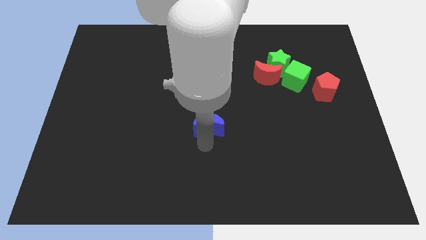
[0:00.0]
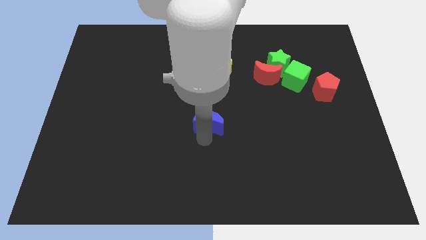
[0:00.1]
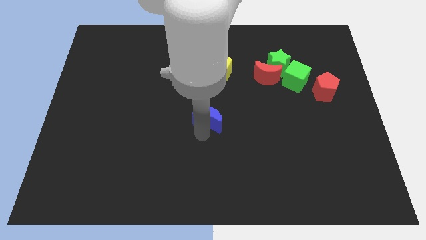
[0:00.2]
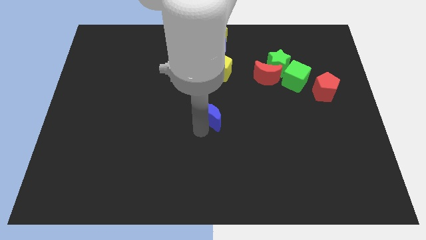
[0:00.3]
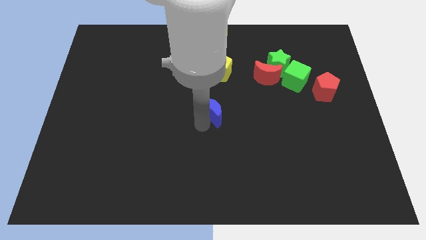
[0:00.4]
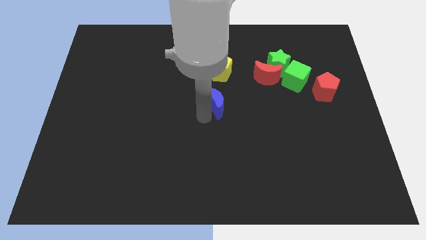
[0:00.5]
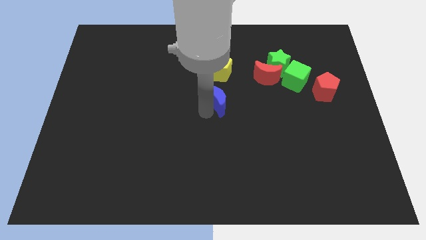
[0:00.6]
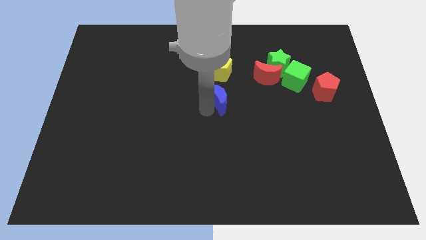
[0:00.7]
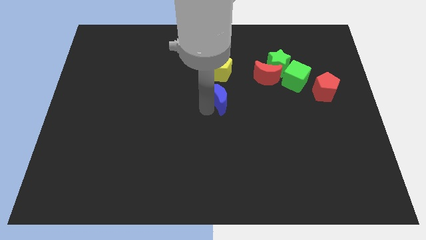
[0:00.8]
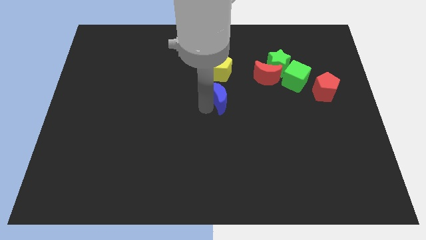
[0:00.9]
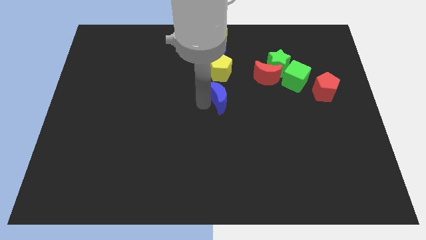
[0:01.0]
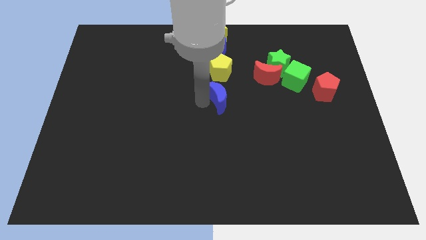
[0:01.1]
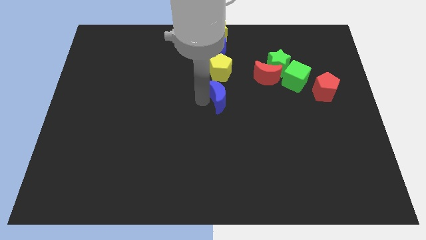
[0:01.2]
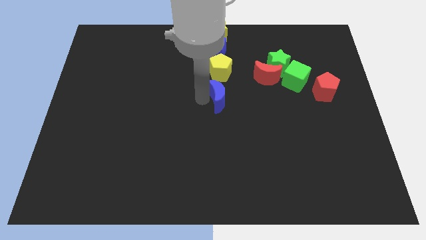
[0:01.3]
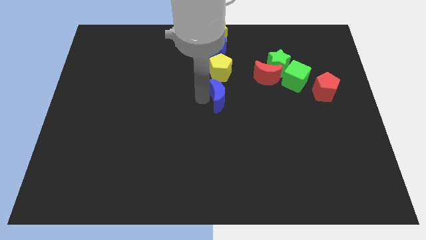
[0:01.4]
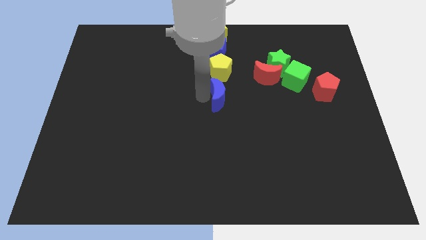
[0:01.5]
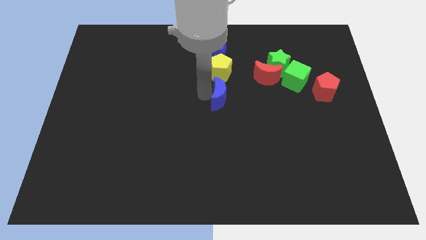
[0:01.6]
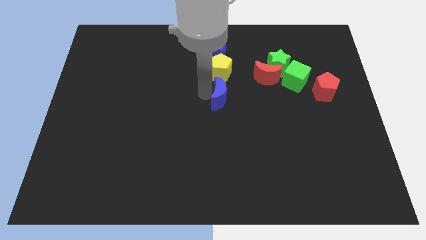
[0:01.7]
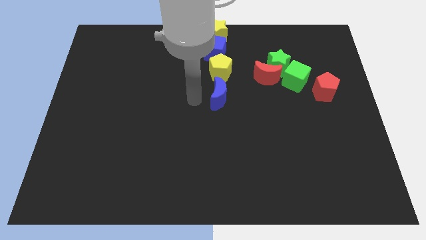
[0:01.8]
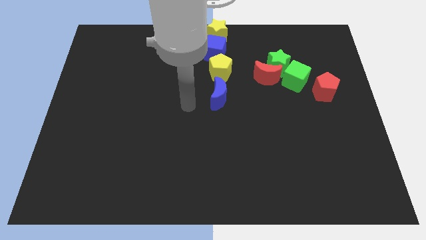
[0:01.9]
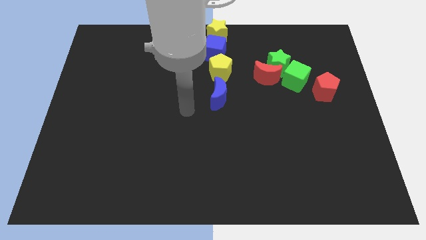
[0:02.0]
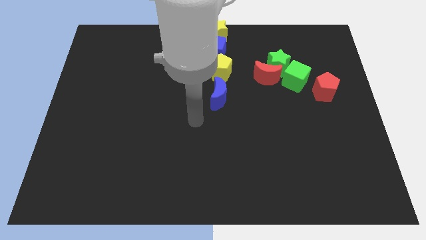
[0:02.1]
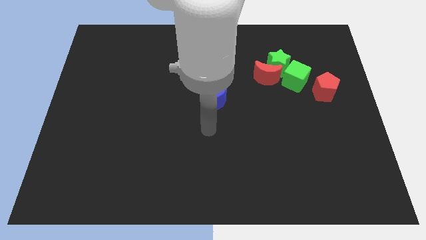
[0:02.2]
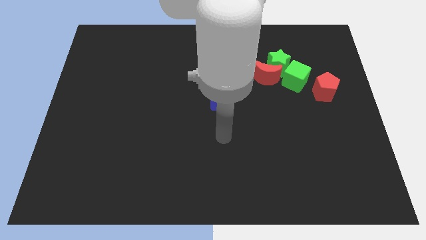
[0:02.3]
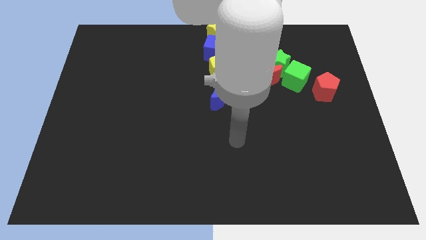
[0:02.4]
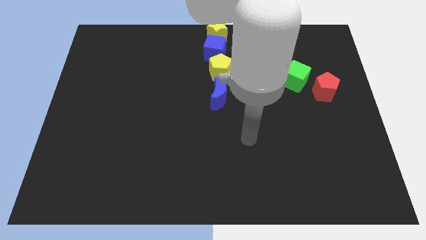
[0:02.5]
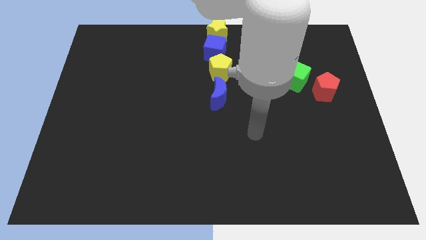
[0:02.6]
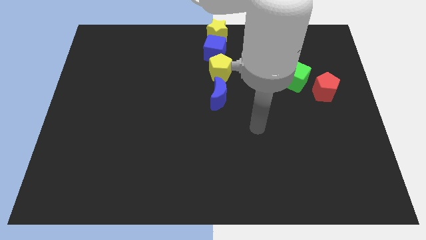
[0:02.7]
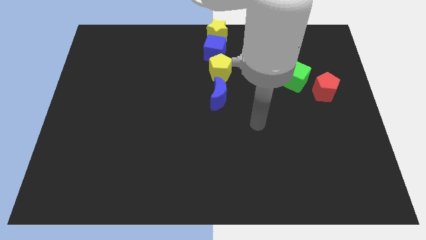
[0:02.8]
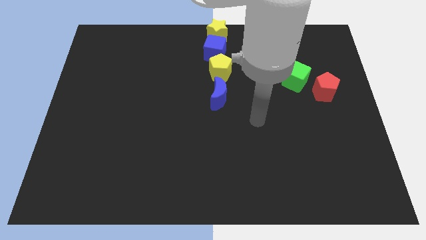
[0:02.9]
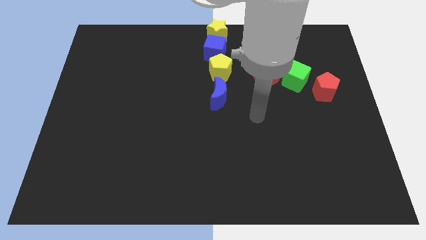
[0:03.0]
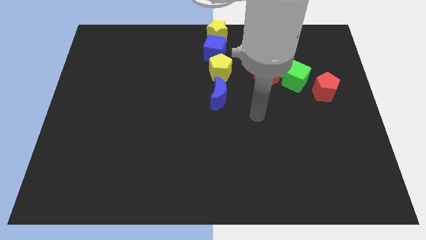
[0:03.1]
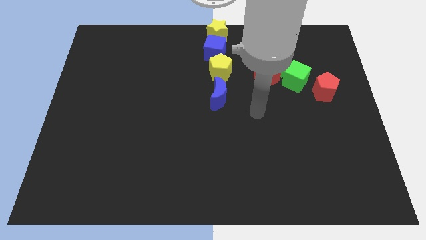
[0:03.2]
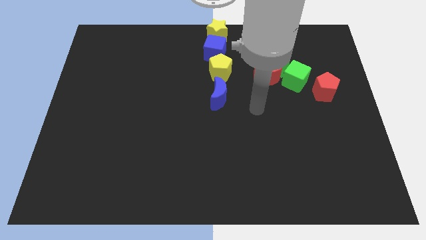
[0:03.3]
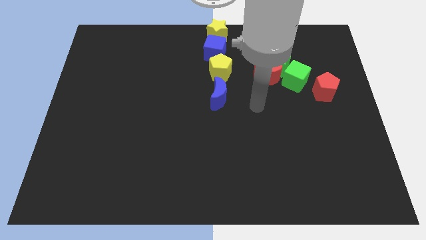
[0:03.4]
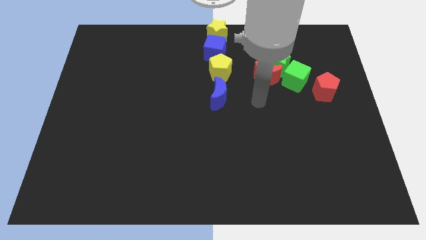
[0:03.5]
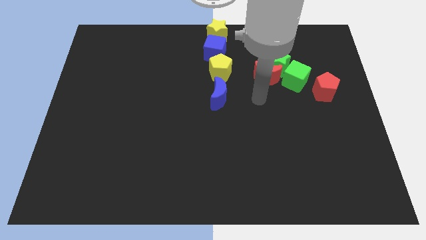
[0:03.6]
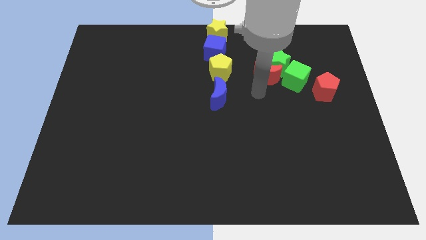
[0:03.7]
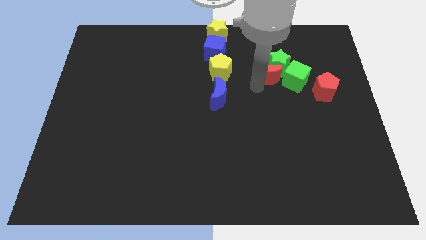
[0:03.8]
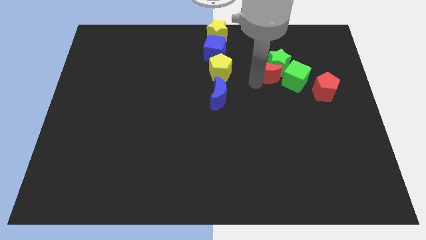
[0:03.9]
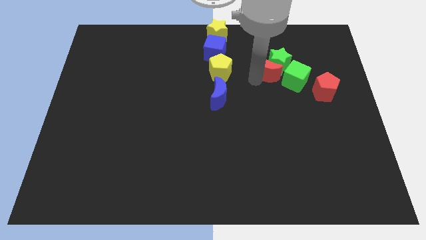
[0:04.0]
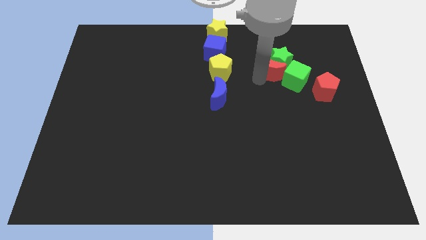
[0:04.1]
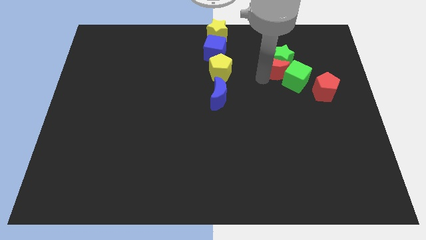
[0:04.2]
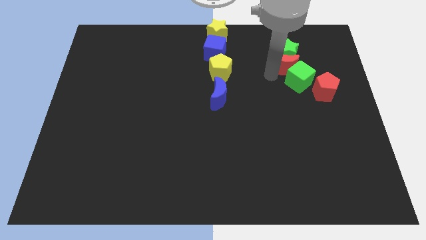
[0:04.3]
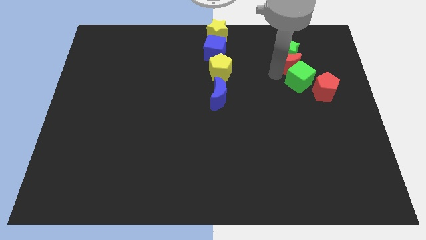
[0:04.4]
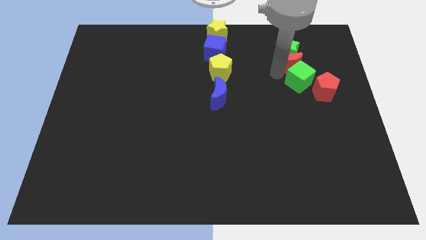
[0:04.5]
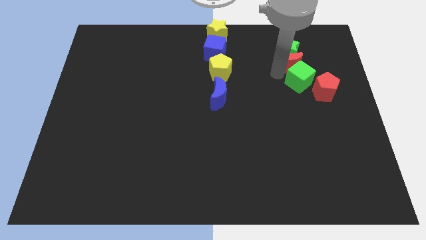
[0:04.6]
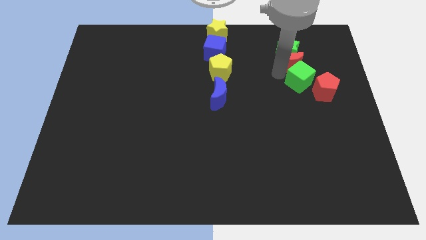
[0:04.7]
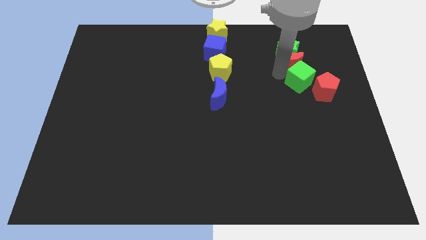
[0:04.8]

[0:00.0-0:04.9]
move the blue moon to the bottom of the yellow pentagon

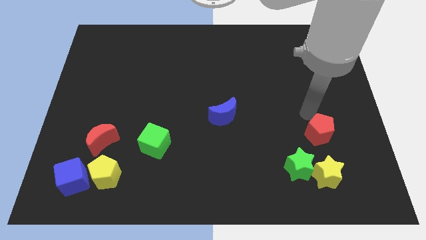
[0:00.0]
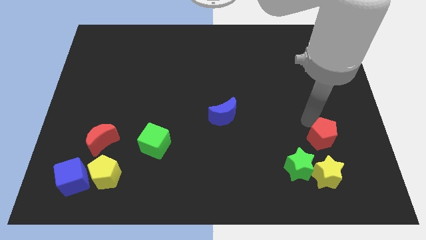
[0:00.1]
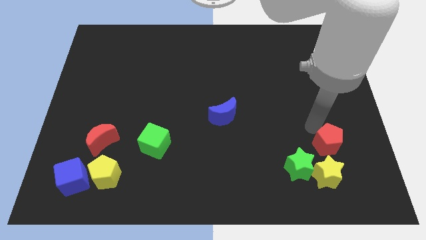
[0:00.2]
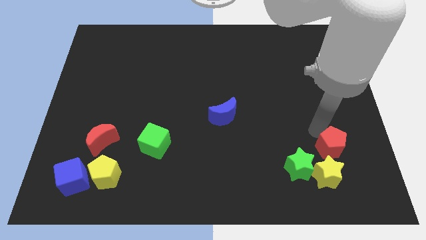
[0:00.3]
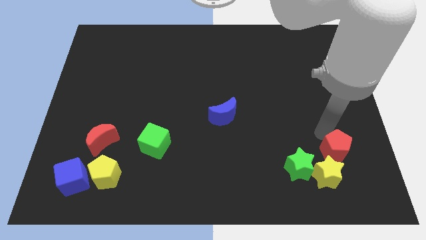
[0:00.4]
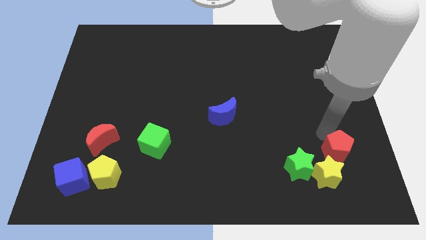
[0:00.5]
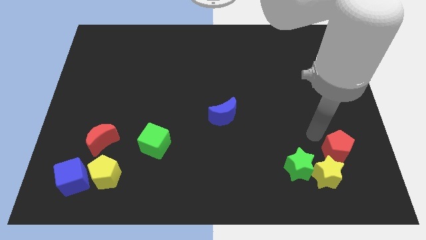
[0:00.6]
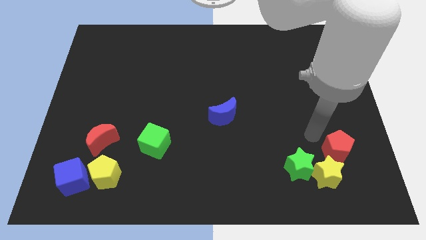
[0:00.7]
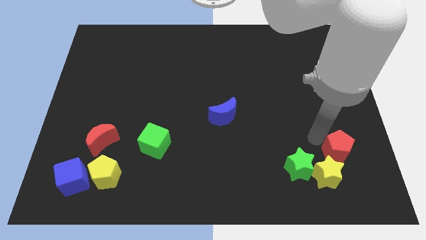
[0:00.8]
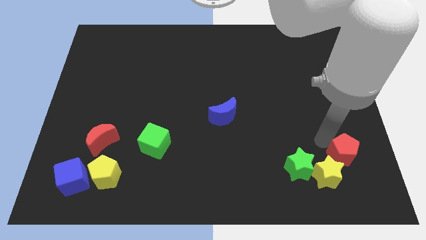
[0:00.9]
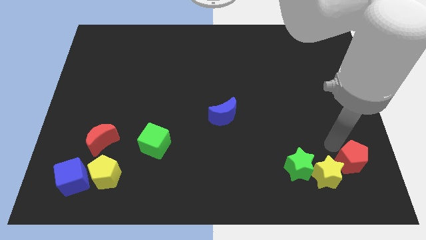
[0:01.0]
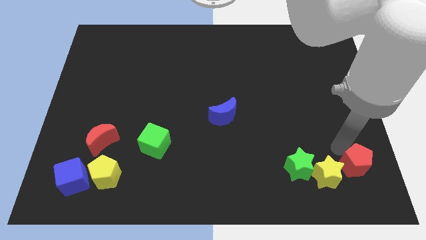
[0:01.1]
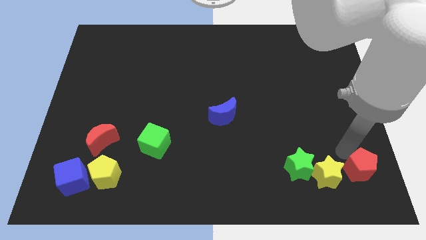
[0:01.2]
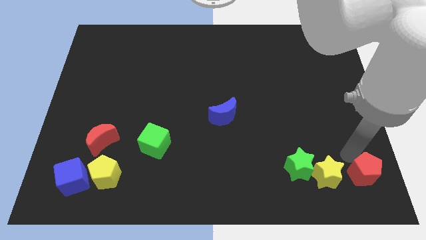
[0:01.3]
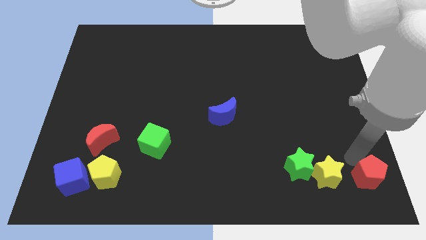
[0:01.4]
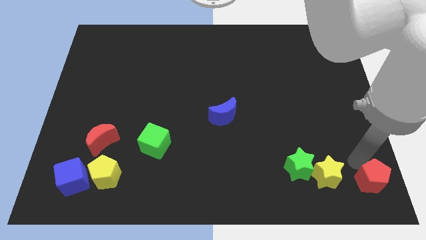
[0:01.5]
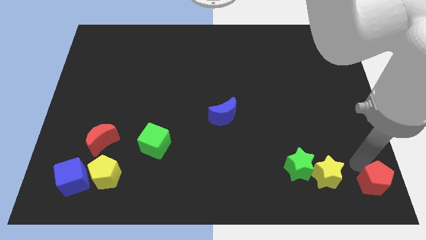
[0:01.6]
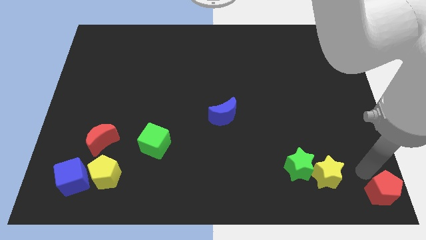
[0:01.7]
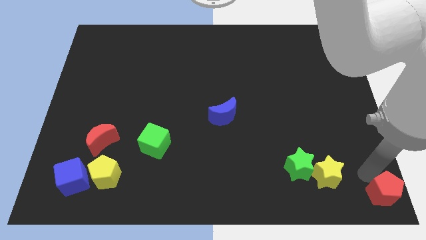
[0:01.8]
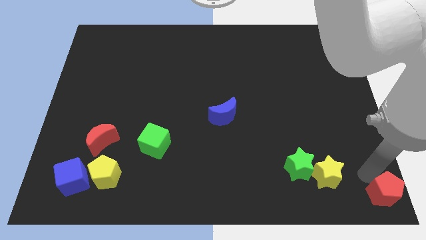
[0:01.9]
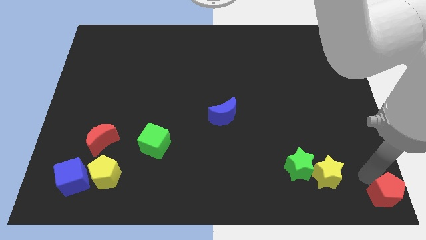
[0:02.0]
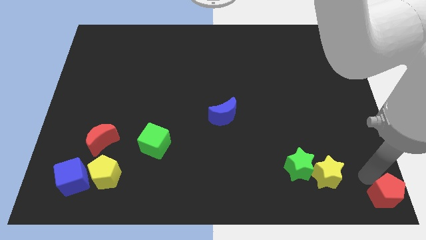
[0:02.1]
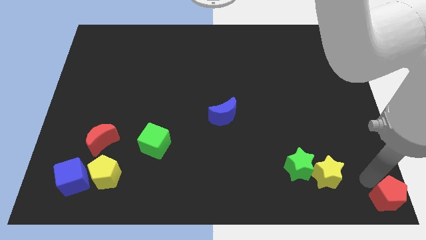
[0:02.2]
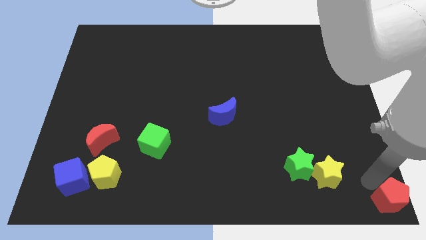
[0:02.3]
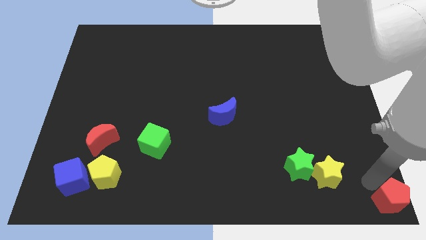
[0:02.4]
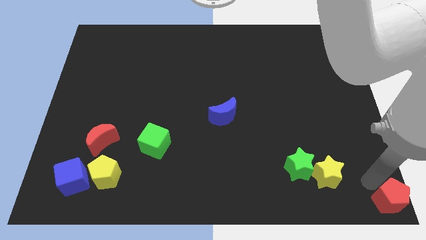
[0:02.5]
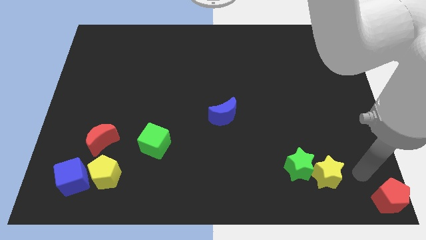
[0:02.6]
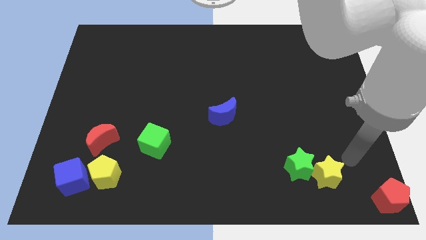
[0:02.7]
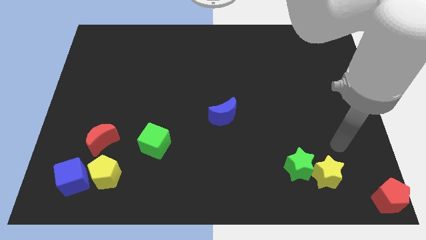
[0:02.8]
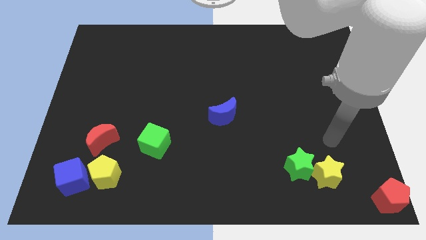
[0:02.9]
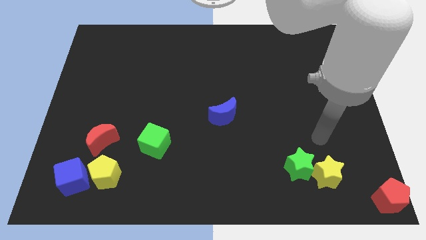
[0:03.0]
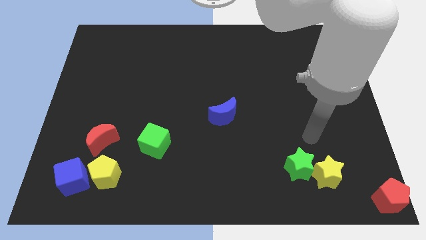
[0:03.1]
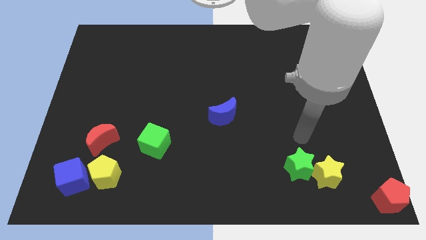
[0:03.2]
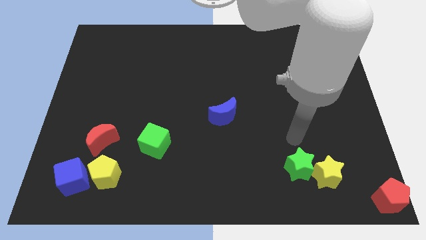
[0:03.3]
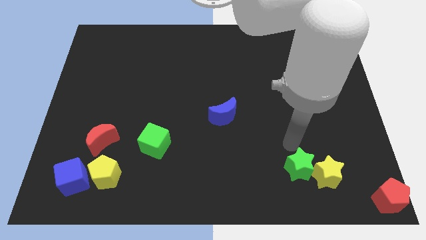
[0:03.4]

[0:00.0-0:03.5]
push the red pentagon to the bottom right of the board

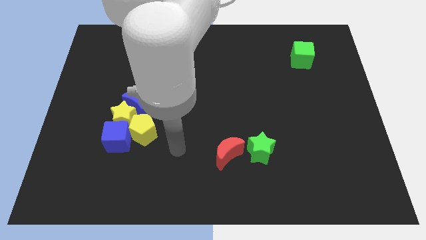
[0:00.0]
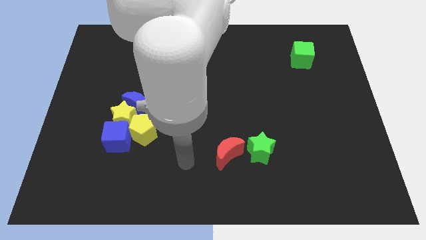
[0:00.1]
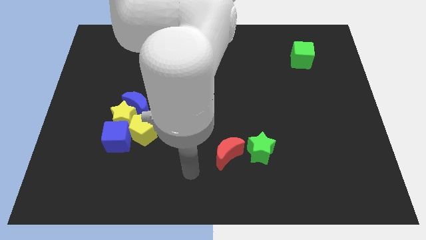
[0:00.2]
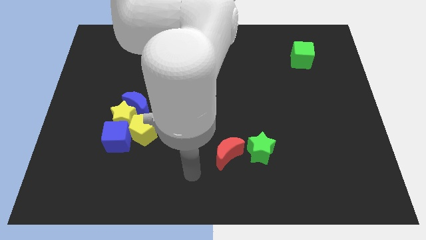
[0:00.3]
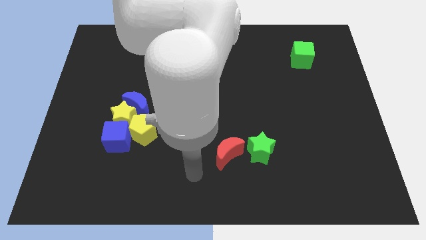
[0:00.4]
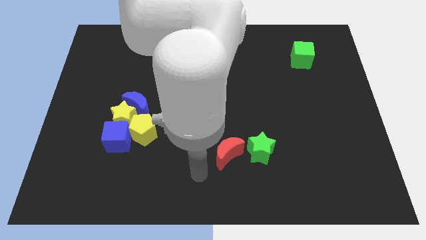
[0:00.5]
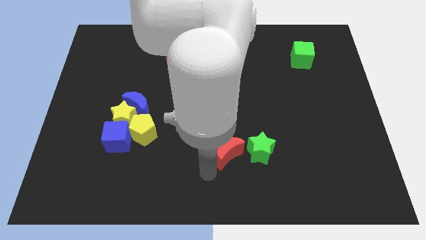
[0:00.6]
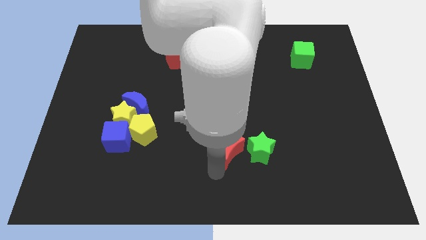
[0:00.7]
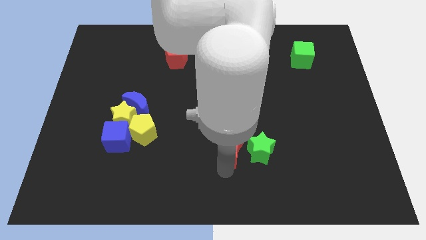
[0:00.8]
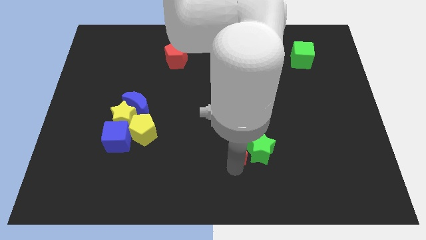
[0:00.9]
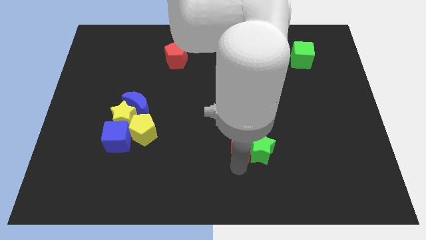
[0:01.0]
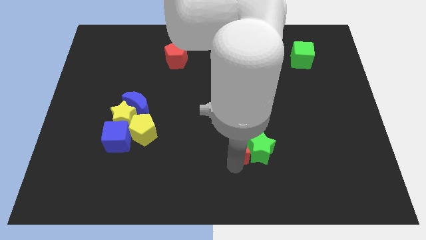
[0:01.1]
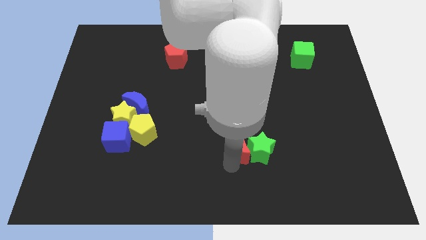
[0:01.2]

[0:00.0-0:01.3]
move the red crescent into the green star
